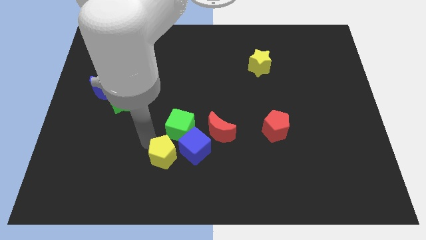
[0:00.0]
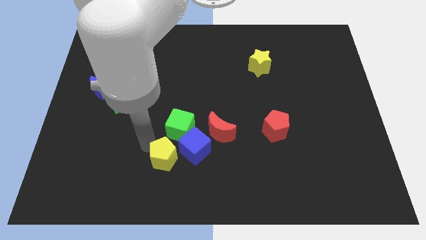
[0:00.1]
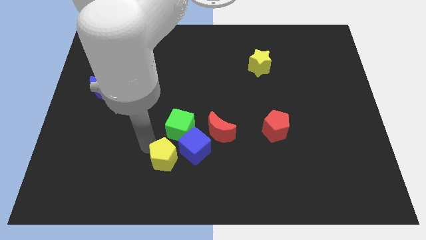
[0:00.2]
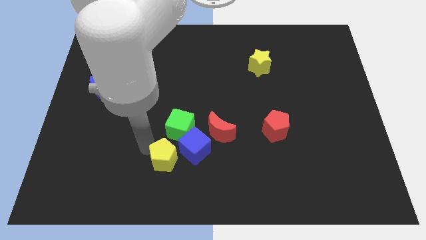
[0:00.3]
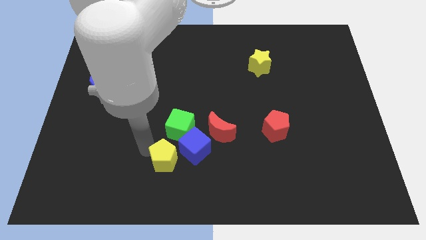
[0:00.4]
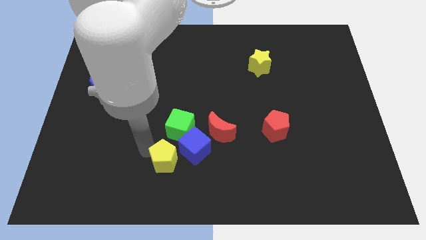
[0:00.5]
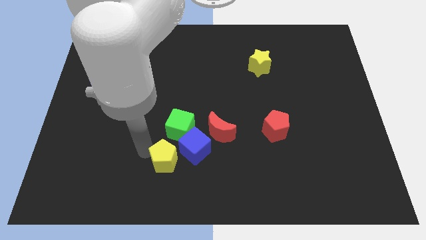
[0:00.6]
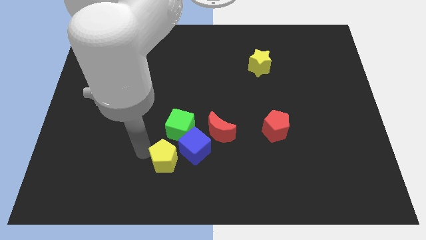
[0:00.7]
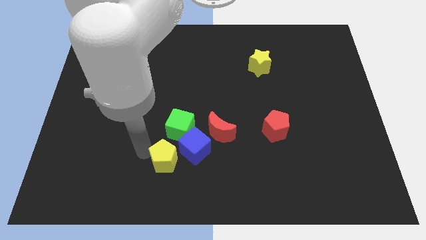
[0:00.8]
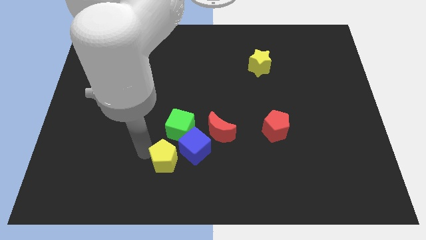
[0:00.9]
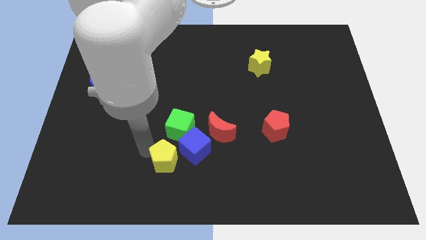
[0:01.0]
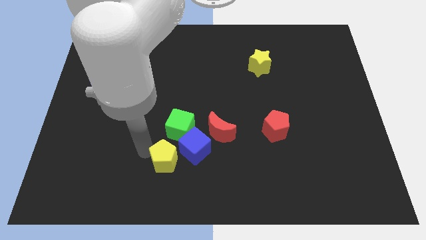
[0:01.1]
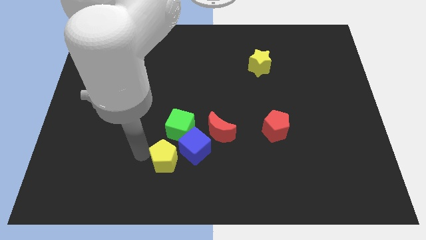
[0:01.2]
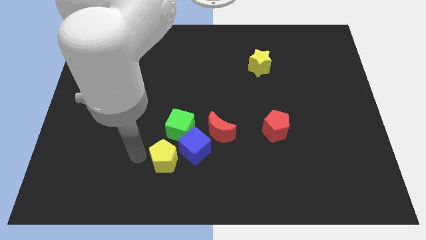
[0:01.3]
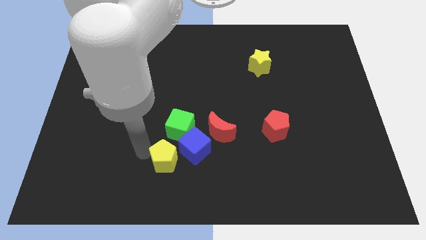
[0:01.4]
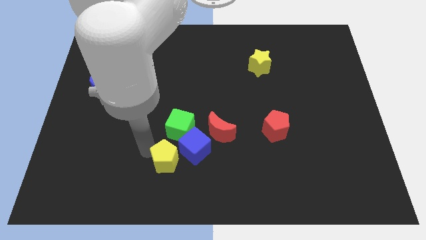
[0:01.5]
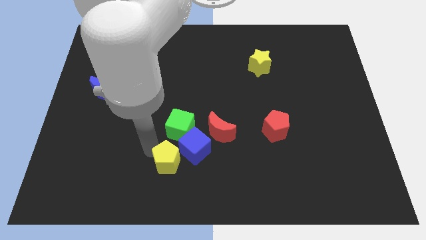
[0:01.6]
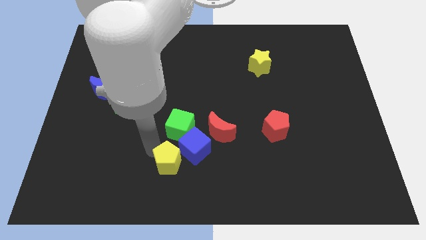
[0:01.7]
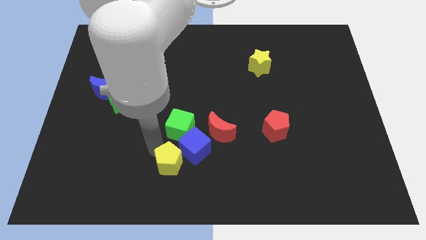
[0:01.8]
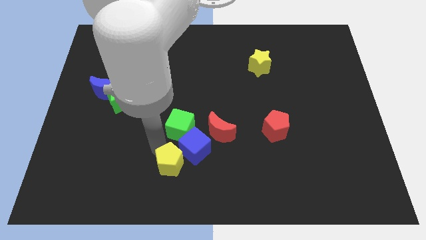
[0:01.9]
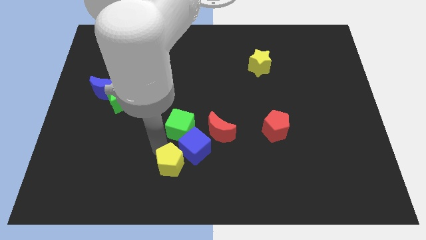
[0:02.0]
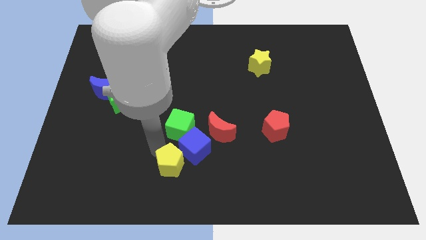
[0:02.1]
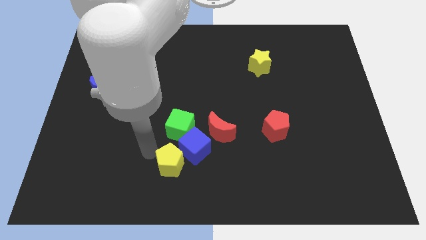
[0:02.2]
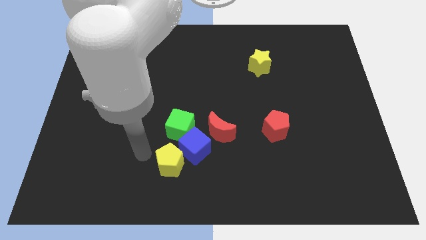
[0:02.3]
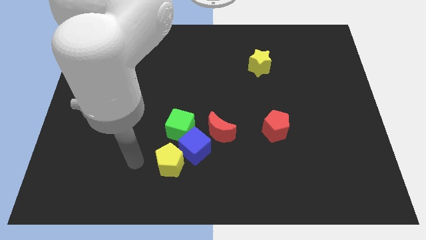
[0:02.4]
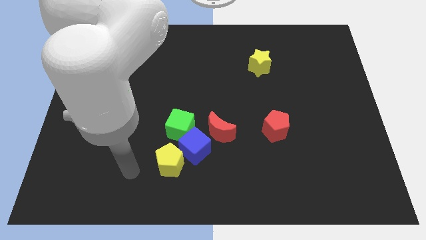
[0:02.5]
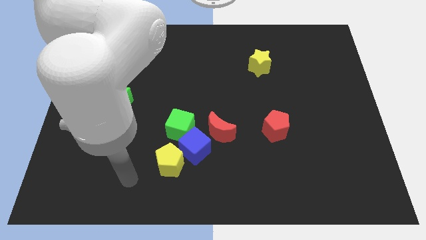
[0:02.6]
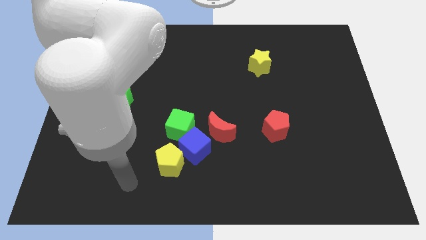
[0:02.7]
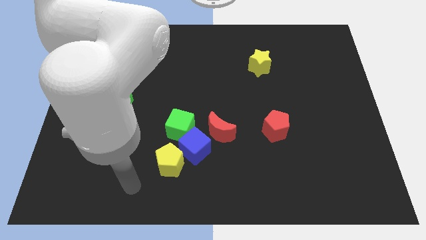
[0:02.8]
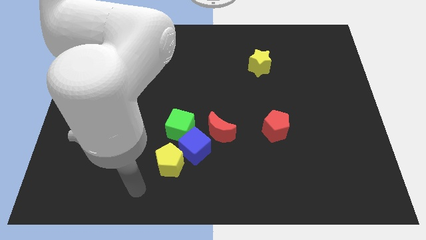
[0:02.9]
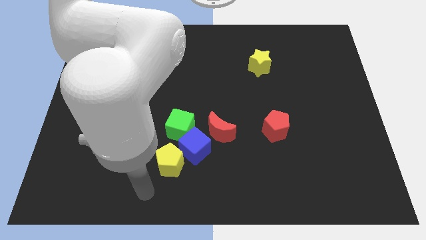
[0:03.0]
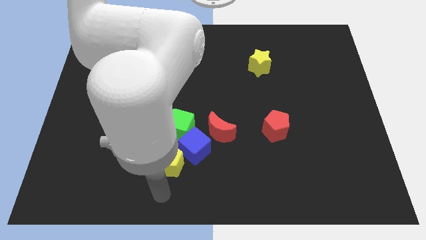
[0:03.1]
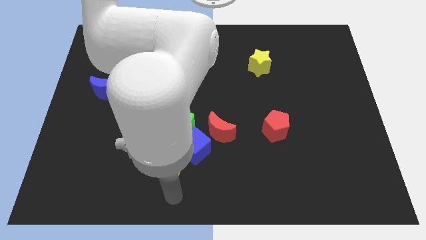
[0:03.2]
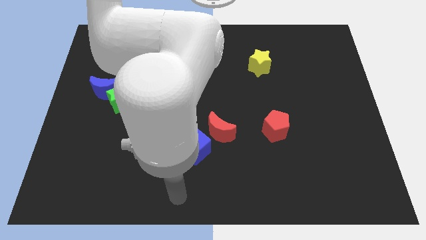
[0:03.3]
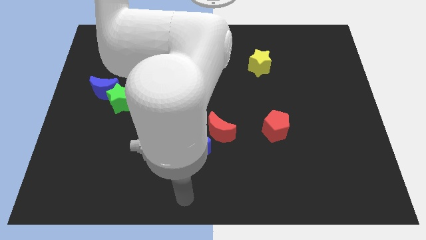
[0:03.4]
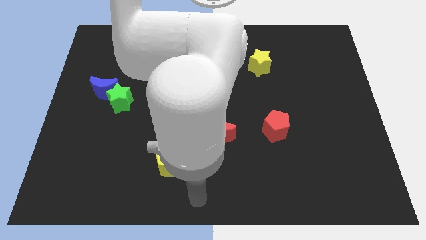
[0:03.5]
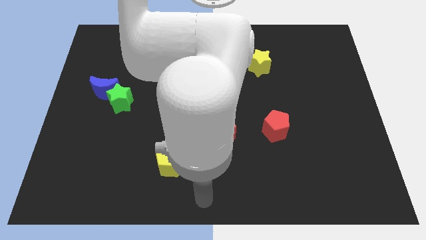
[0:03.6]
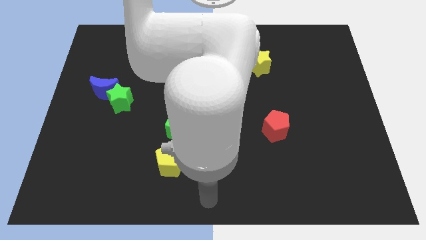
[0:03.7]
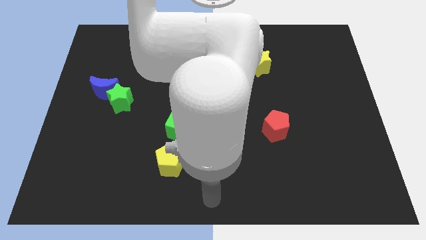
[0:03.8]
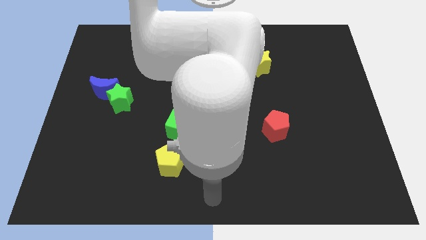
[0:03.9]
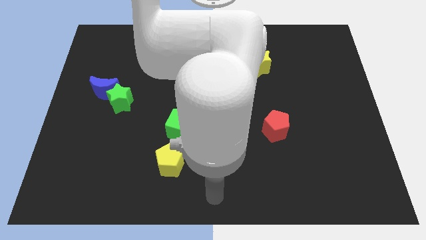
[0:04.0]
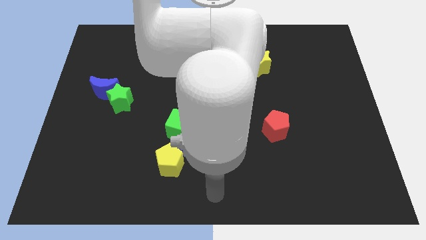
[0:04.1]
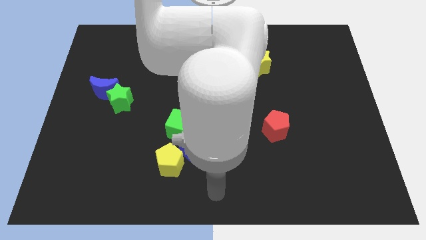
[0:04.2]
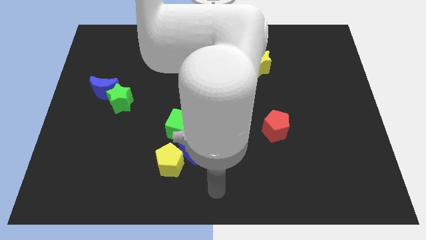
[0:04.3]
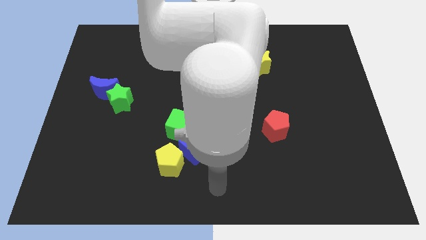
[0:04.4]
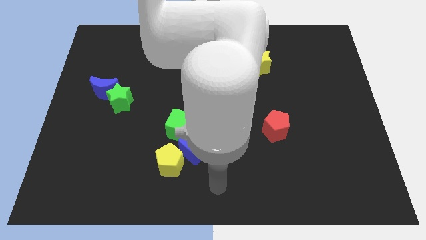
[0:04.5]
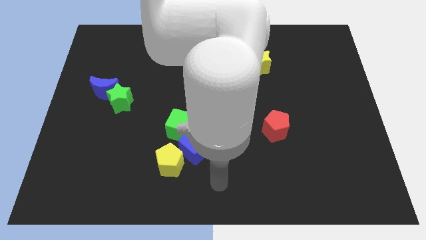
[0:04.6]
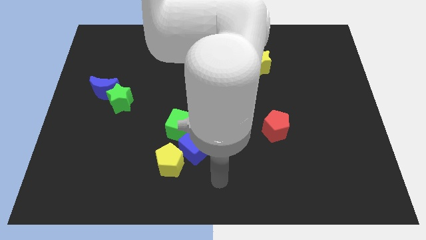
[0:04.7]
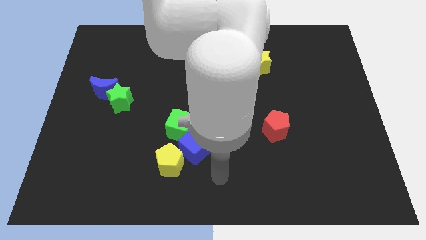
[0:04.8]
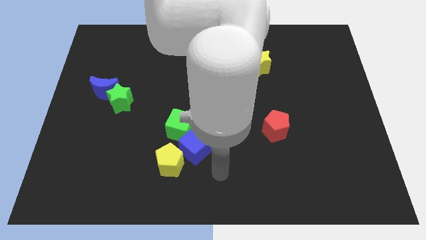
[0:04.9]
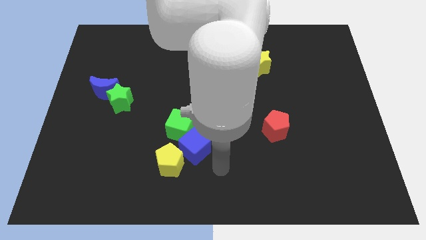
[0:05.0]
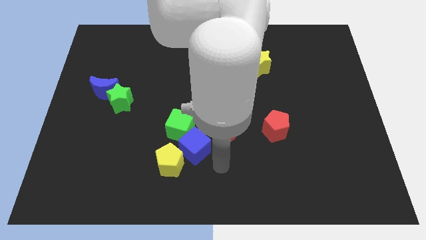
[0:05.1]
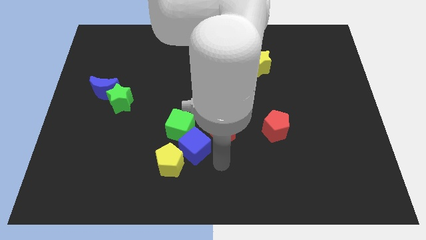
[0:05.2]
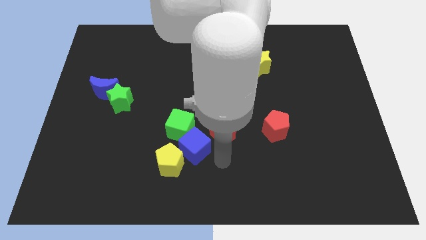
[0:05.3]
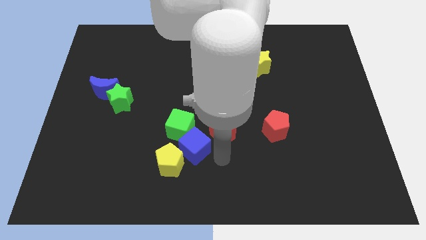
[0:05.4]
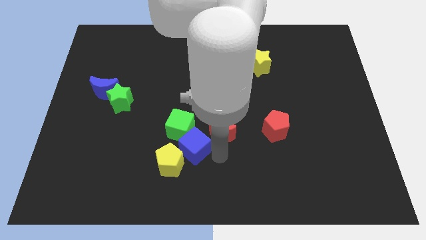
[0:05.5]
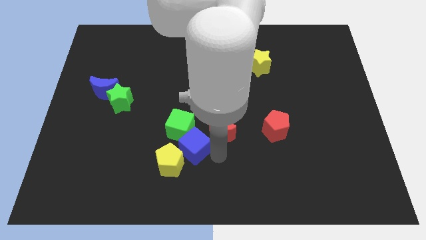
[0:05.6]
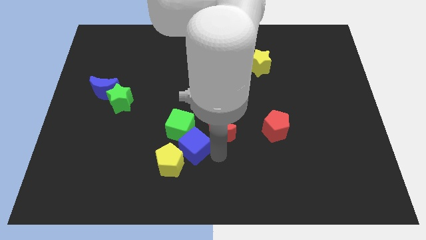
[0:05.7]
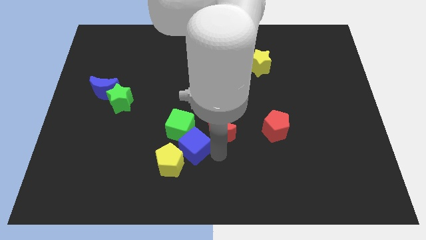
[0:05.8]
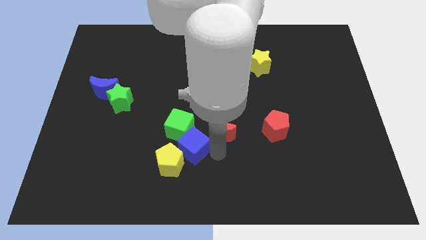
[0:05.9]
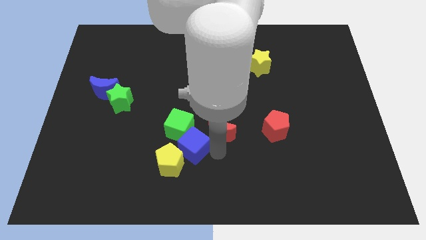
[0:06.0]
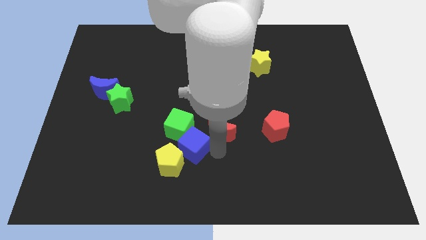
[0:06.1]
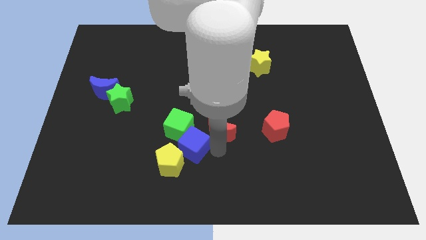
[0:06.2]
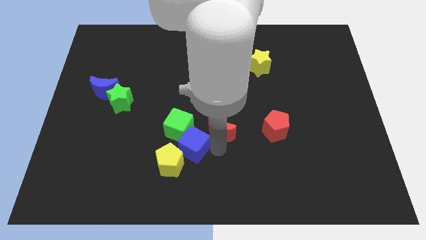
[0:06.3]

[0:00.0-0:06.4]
place your arm right to blue cube

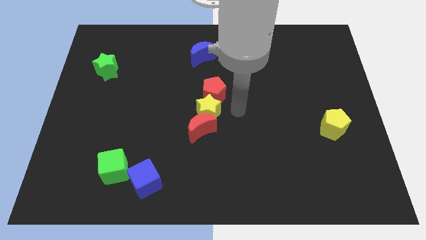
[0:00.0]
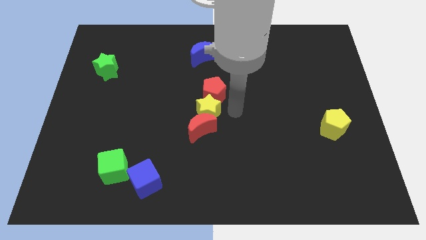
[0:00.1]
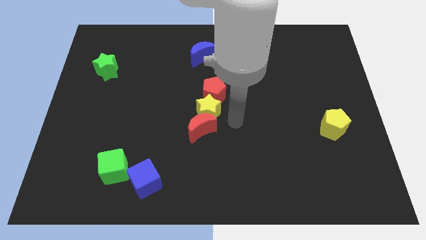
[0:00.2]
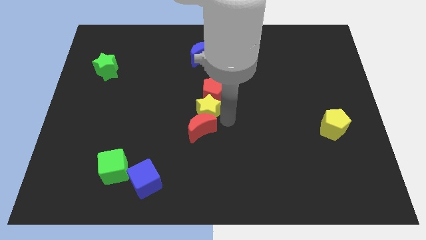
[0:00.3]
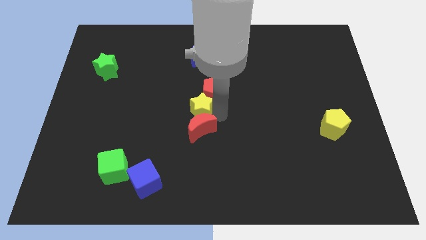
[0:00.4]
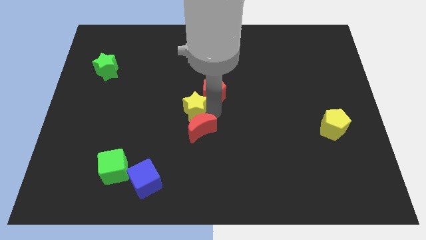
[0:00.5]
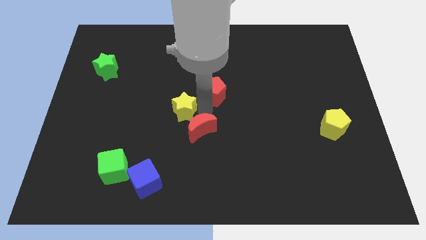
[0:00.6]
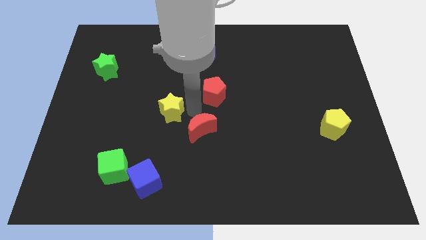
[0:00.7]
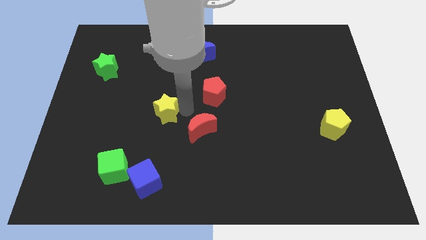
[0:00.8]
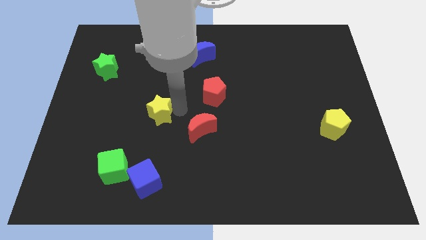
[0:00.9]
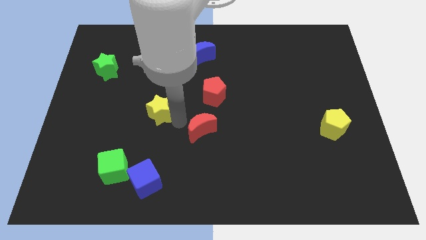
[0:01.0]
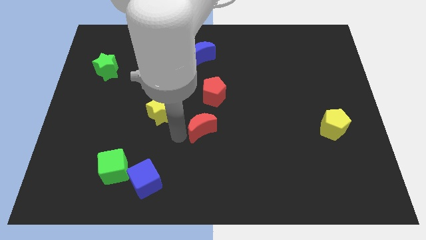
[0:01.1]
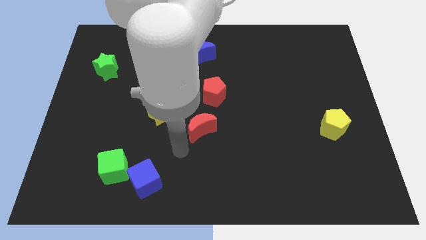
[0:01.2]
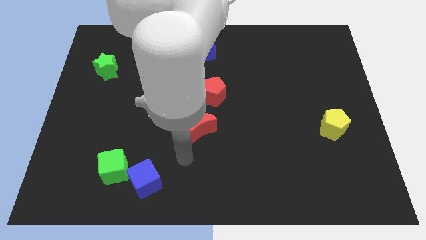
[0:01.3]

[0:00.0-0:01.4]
separate the yellow star from the red blocks

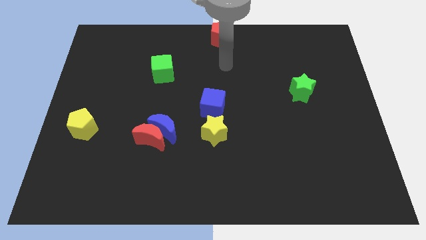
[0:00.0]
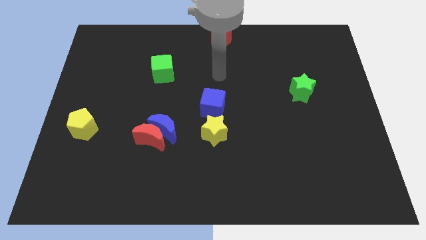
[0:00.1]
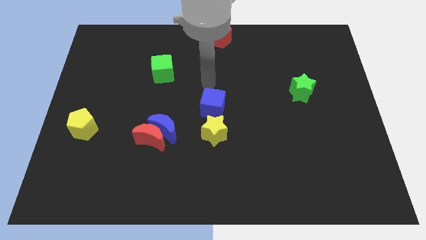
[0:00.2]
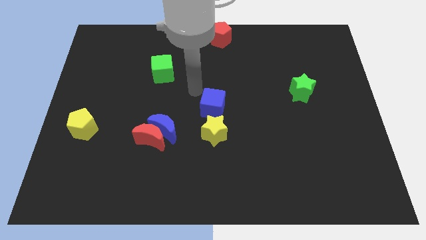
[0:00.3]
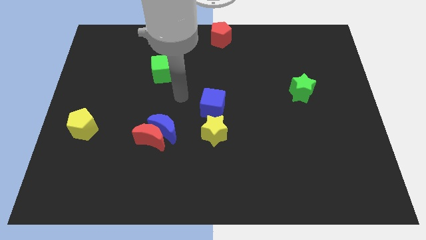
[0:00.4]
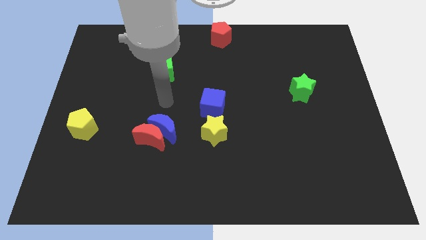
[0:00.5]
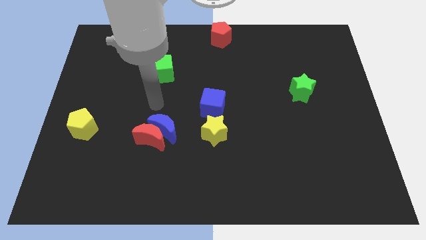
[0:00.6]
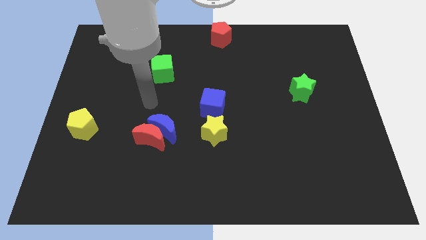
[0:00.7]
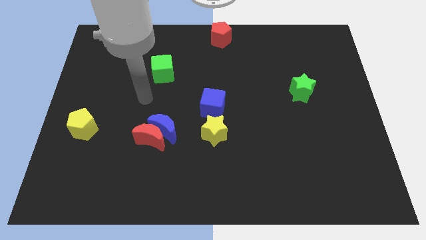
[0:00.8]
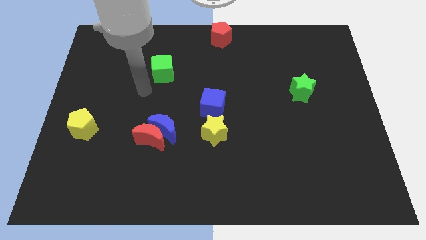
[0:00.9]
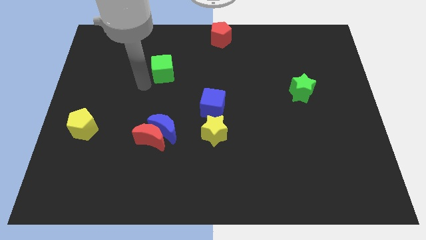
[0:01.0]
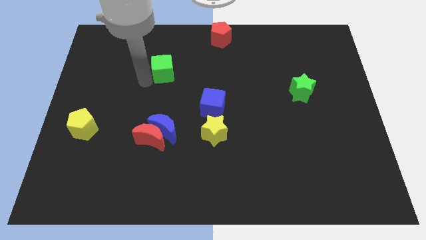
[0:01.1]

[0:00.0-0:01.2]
move your arm towards the green cube

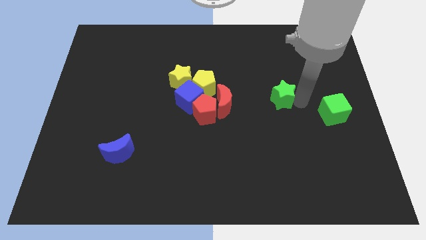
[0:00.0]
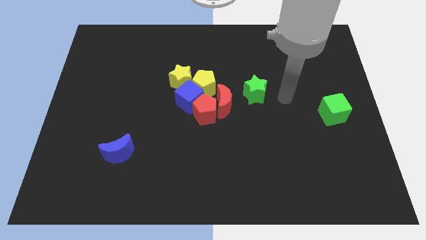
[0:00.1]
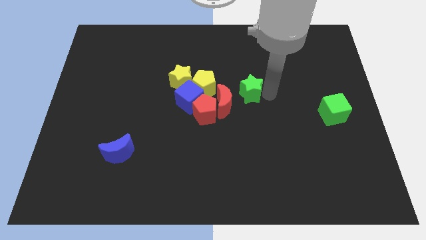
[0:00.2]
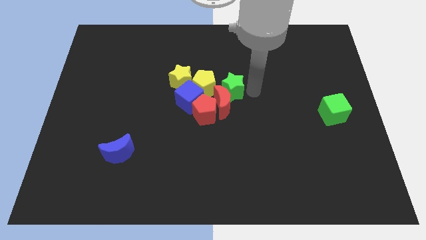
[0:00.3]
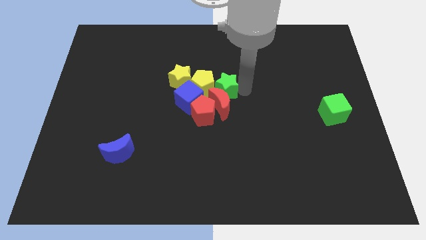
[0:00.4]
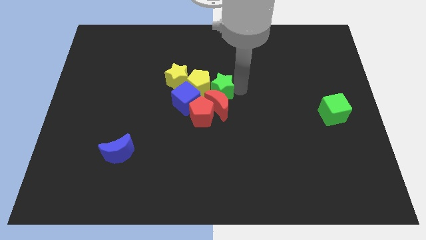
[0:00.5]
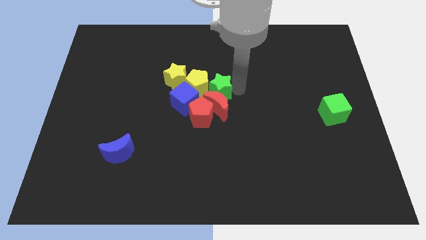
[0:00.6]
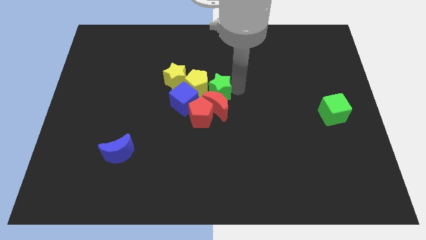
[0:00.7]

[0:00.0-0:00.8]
move the green star to the center of the board
